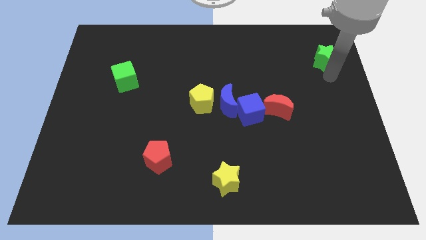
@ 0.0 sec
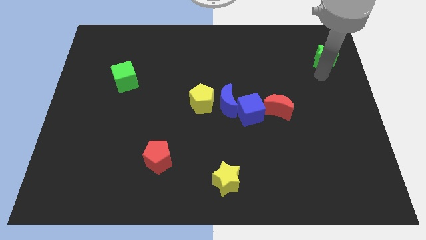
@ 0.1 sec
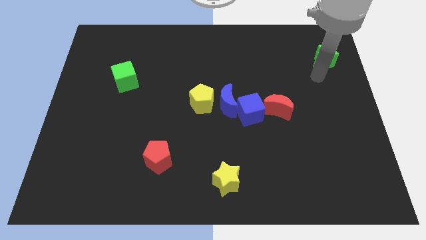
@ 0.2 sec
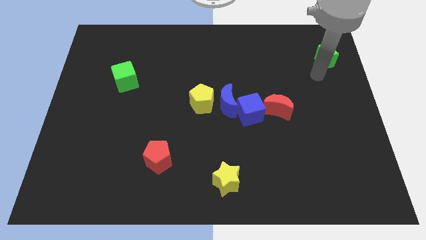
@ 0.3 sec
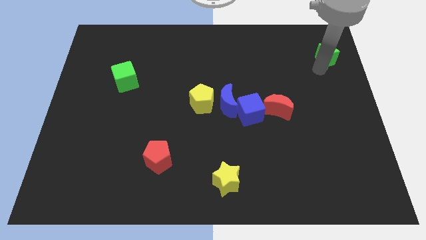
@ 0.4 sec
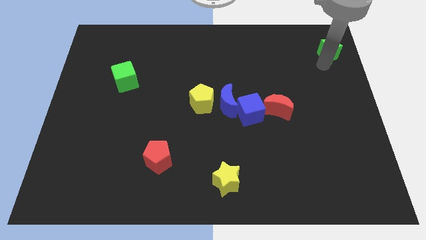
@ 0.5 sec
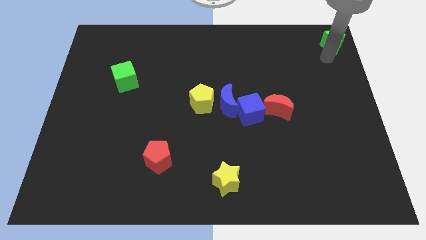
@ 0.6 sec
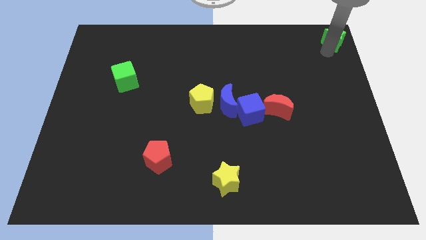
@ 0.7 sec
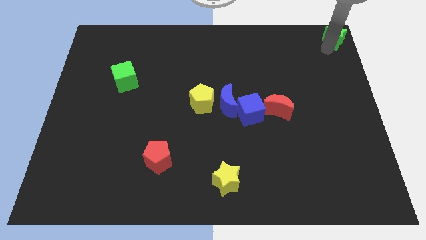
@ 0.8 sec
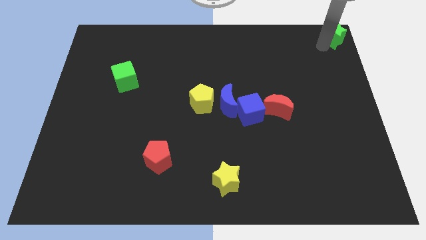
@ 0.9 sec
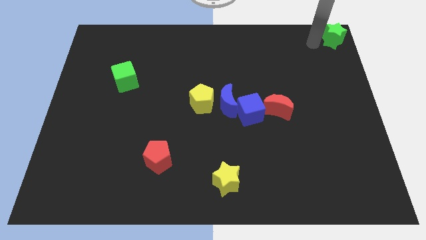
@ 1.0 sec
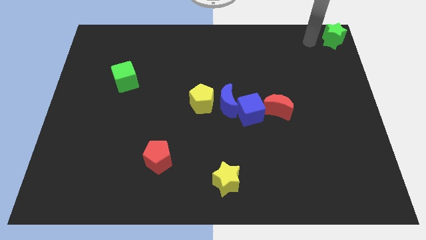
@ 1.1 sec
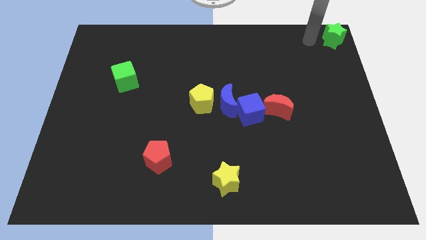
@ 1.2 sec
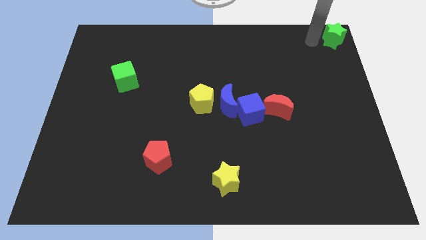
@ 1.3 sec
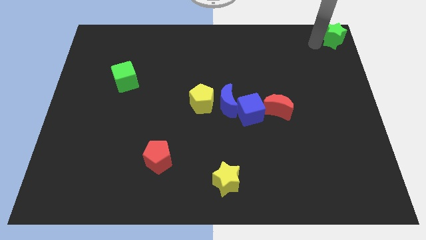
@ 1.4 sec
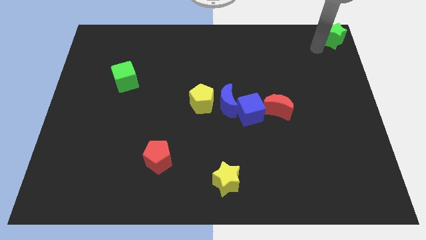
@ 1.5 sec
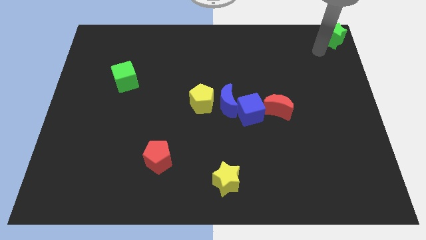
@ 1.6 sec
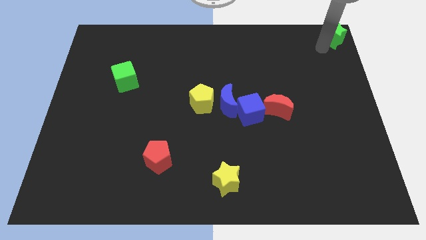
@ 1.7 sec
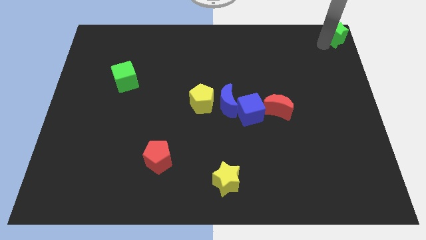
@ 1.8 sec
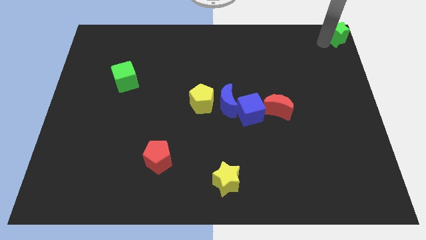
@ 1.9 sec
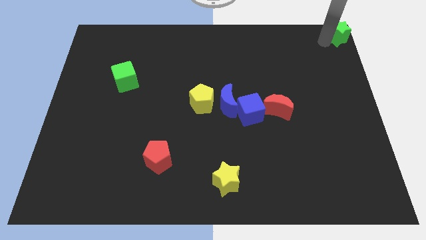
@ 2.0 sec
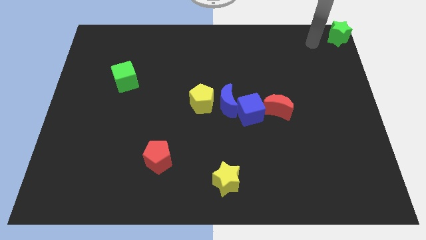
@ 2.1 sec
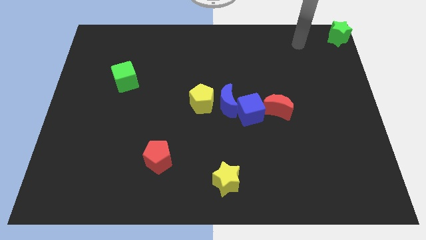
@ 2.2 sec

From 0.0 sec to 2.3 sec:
push the green star to the top right corner

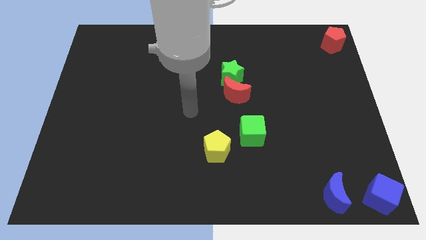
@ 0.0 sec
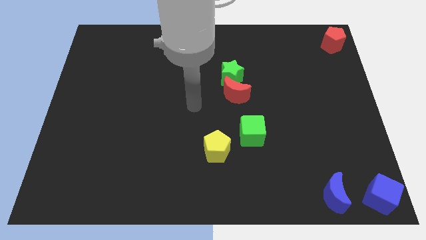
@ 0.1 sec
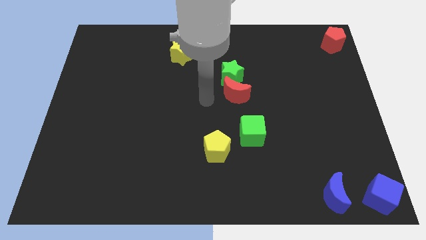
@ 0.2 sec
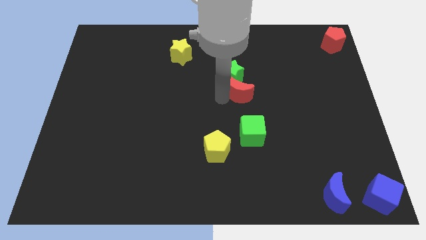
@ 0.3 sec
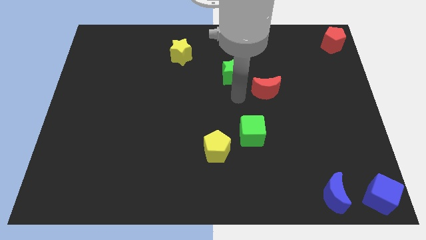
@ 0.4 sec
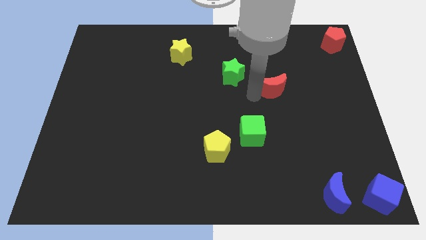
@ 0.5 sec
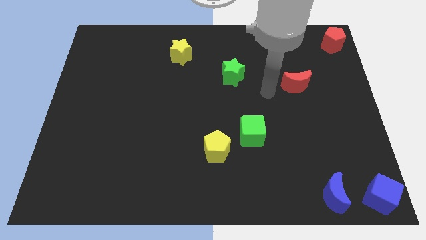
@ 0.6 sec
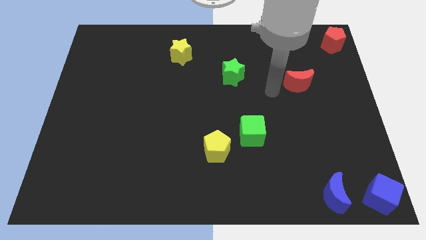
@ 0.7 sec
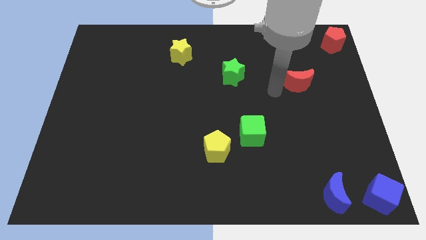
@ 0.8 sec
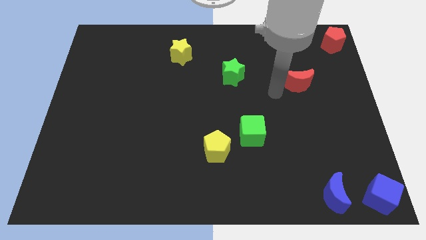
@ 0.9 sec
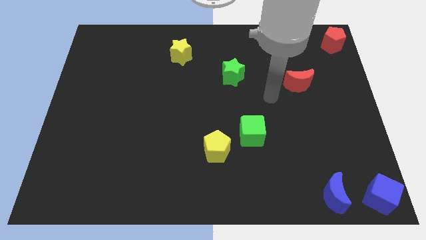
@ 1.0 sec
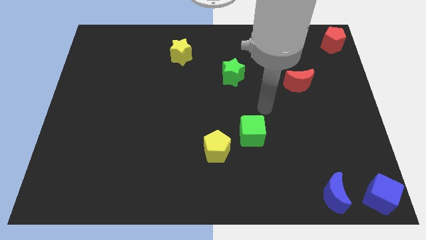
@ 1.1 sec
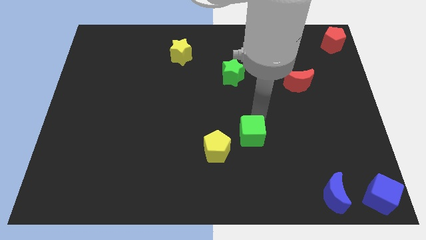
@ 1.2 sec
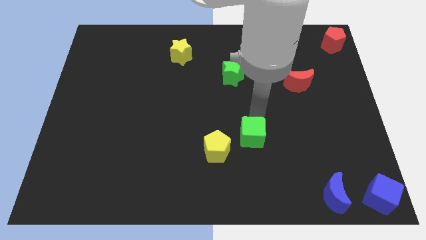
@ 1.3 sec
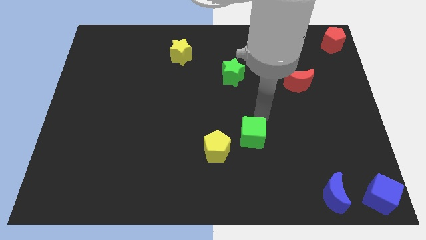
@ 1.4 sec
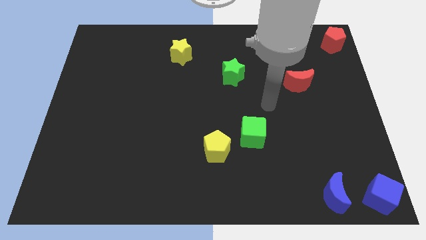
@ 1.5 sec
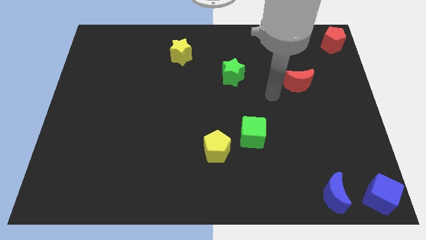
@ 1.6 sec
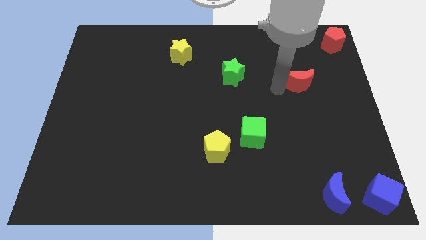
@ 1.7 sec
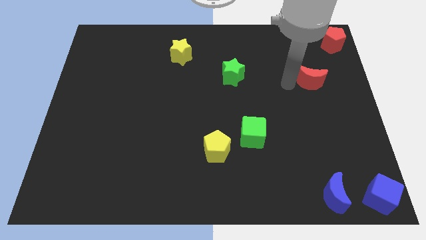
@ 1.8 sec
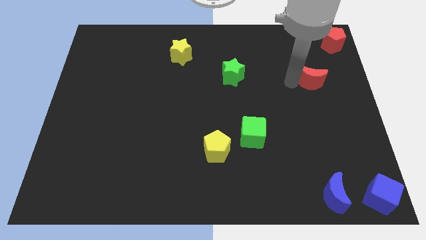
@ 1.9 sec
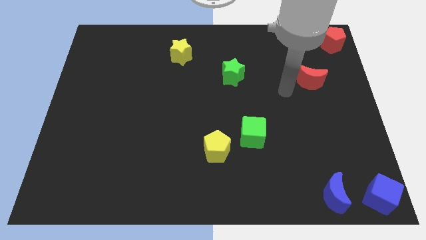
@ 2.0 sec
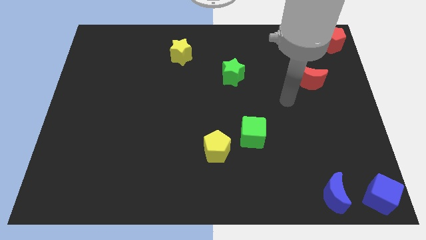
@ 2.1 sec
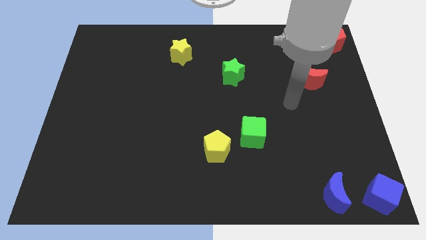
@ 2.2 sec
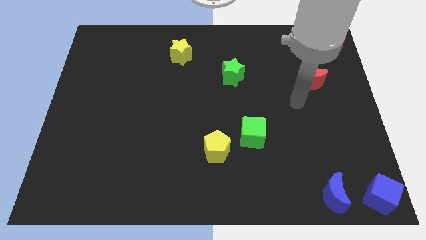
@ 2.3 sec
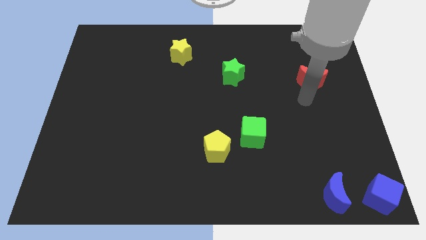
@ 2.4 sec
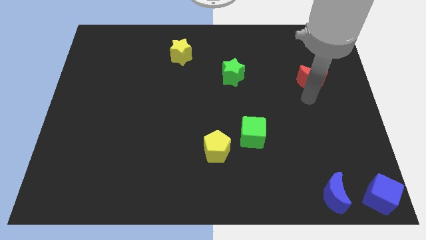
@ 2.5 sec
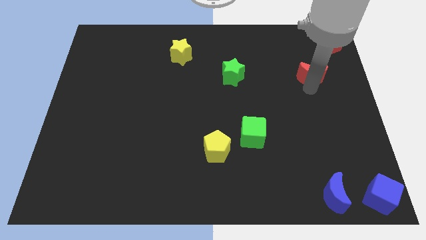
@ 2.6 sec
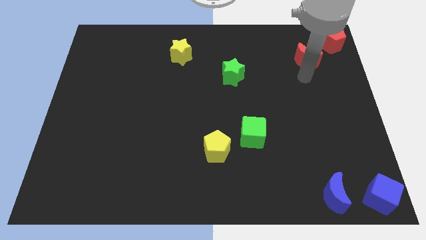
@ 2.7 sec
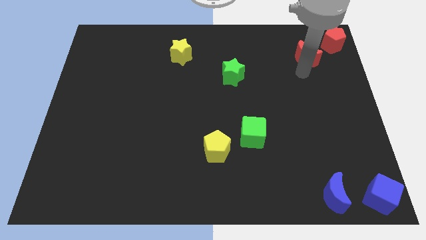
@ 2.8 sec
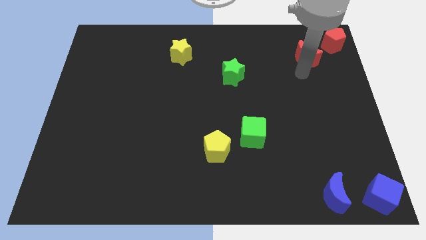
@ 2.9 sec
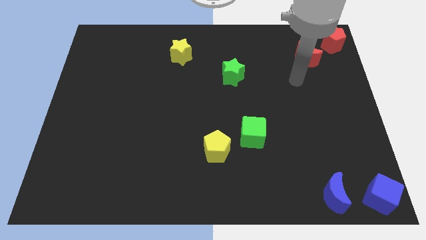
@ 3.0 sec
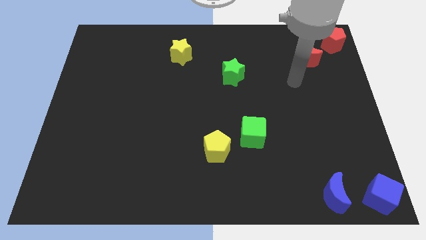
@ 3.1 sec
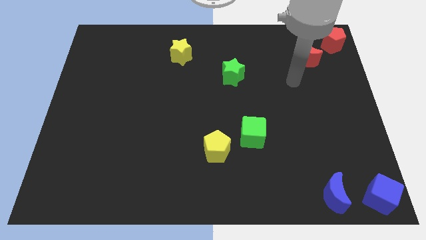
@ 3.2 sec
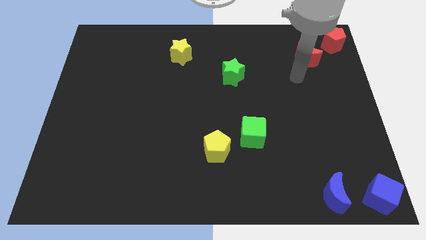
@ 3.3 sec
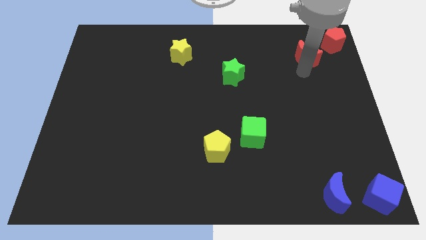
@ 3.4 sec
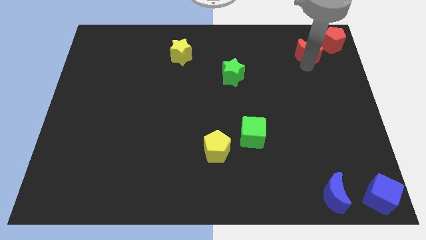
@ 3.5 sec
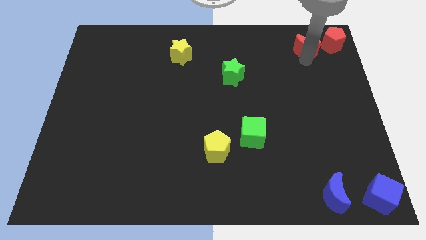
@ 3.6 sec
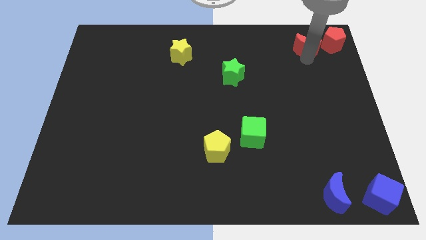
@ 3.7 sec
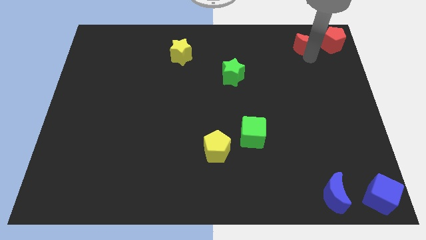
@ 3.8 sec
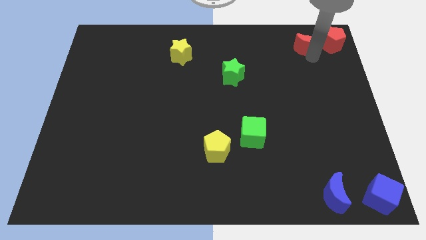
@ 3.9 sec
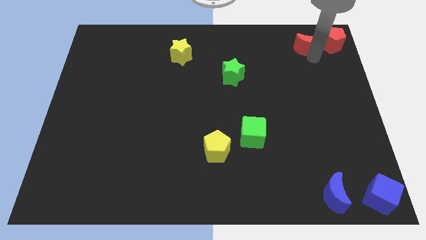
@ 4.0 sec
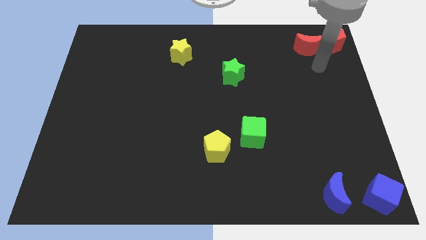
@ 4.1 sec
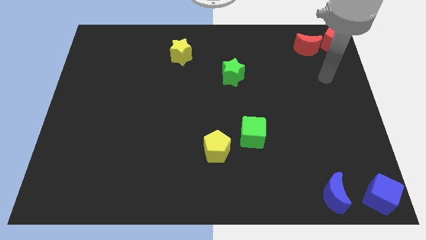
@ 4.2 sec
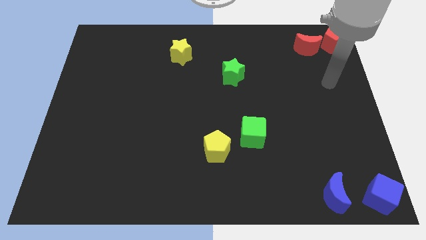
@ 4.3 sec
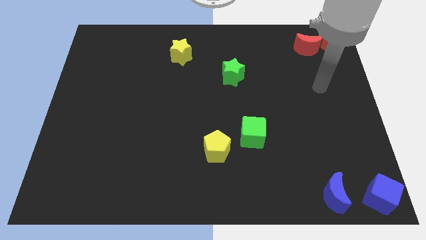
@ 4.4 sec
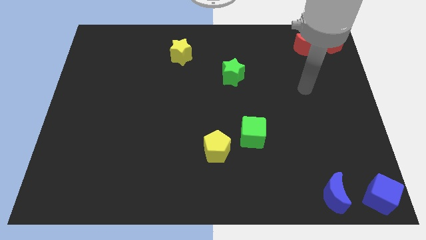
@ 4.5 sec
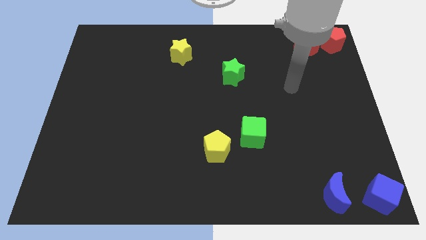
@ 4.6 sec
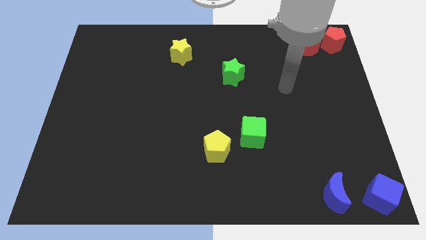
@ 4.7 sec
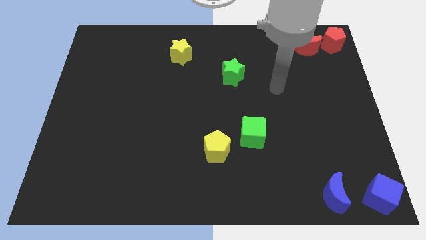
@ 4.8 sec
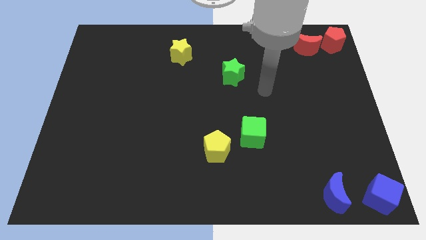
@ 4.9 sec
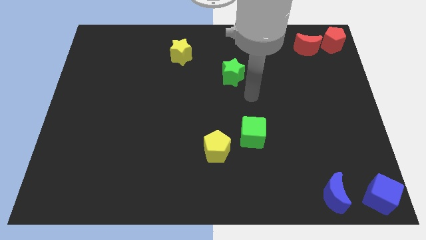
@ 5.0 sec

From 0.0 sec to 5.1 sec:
push the red moon to the top right side

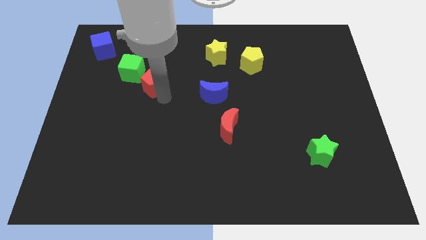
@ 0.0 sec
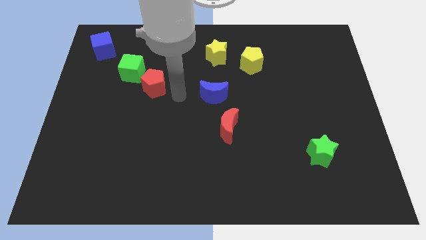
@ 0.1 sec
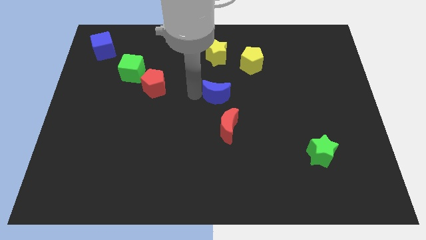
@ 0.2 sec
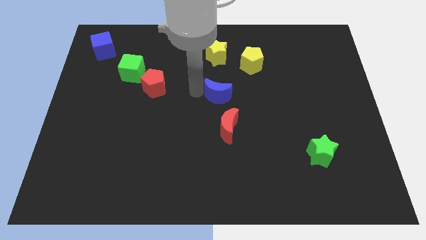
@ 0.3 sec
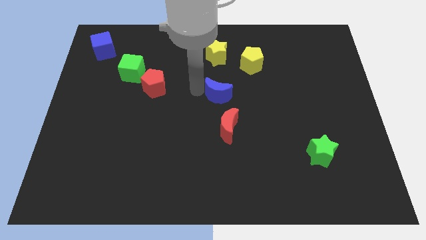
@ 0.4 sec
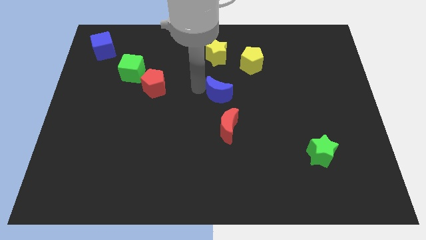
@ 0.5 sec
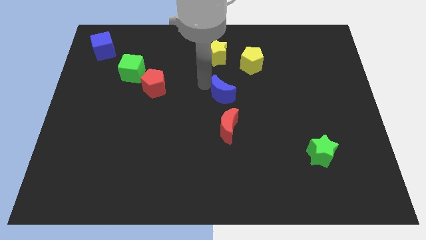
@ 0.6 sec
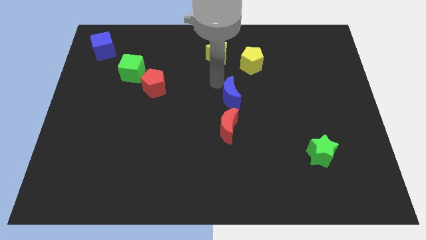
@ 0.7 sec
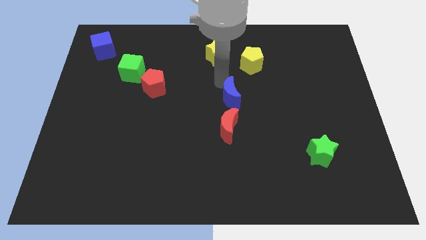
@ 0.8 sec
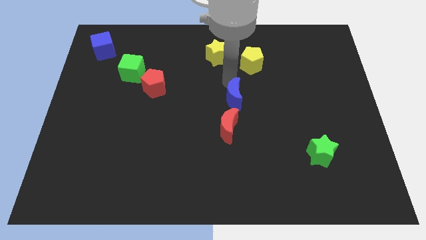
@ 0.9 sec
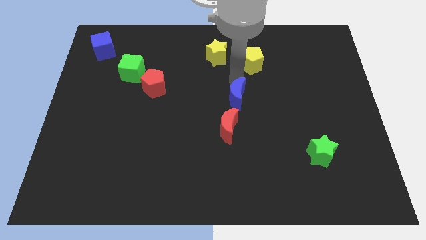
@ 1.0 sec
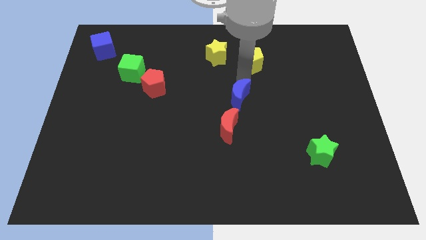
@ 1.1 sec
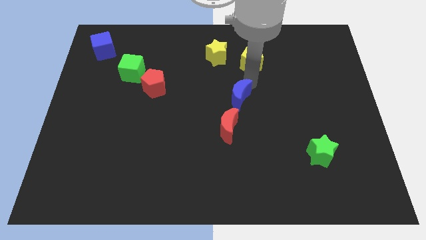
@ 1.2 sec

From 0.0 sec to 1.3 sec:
place the blue moon in between the yellow pentagon and red moon

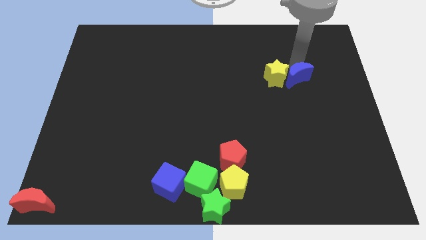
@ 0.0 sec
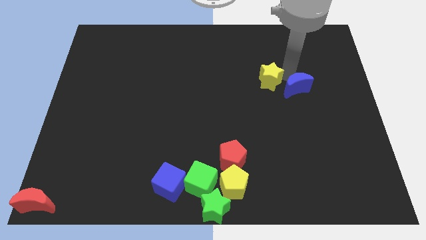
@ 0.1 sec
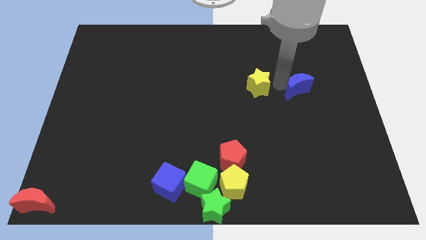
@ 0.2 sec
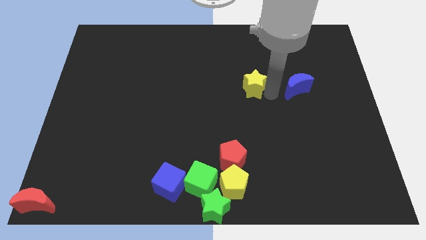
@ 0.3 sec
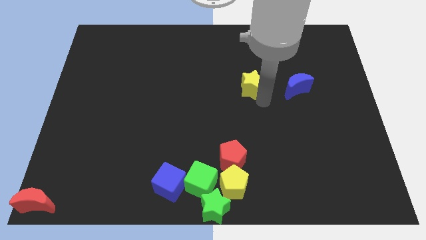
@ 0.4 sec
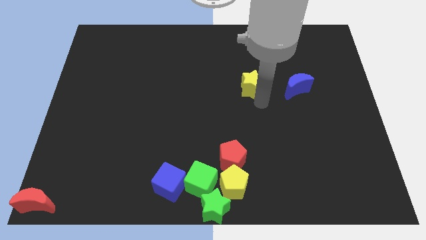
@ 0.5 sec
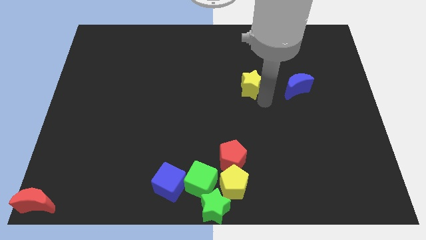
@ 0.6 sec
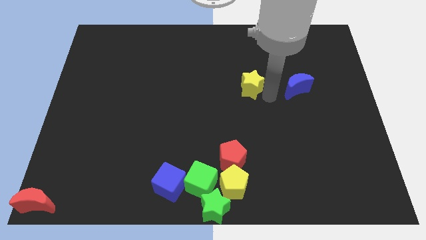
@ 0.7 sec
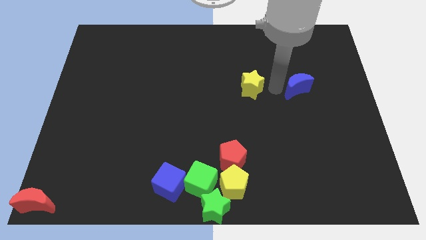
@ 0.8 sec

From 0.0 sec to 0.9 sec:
separate the yellow star and blue moon
